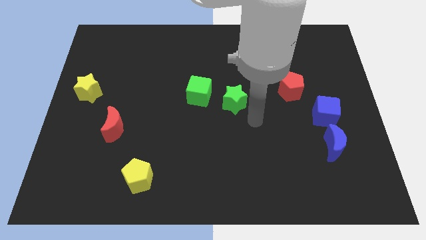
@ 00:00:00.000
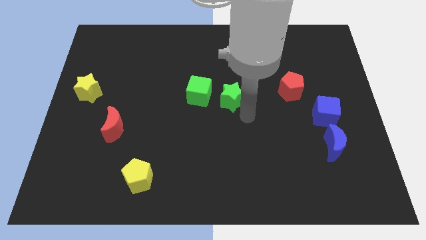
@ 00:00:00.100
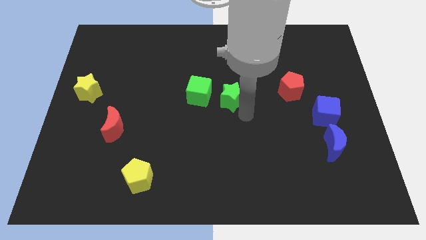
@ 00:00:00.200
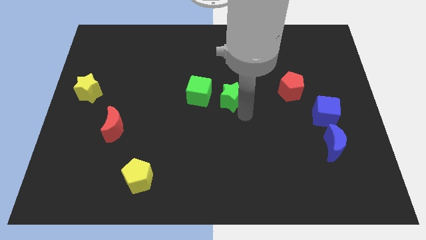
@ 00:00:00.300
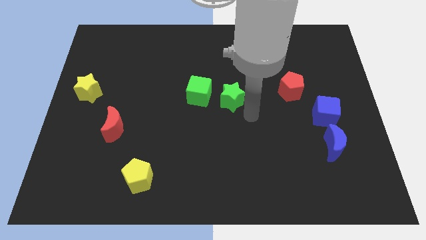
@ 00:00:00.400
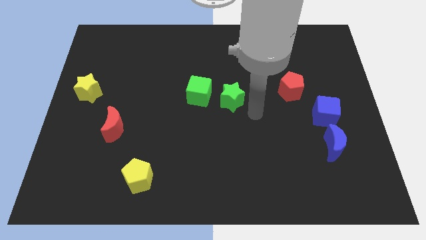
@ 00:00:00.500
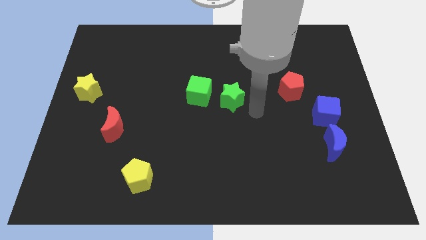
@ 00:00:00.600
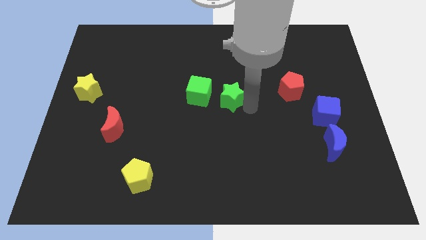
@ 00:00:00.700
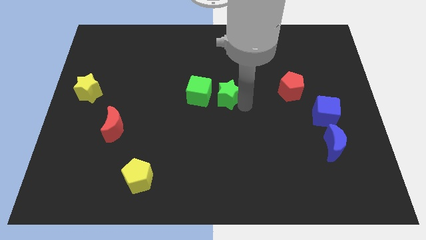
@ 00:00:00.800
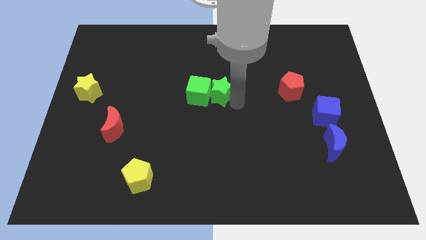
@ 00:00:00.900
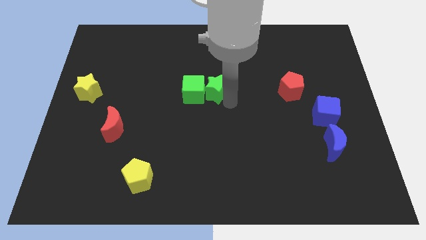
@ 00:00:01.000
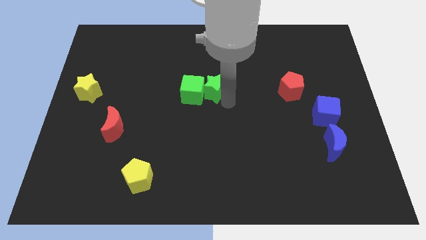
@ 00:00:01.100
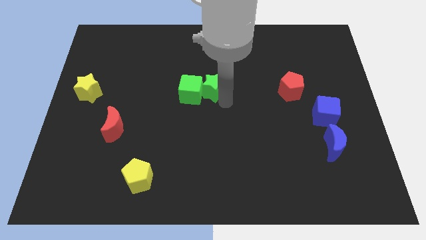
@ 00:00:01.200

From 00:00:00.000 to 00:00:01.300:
push the green star into the green cube

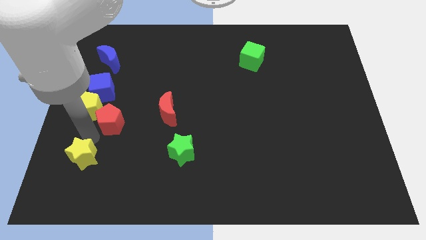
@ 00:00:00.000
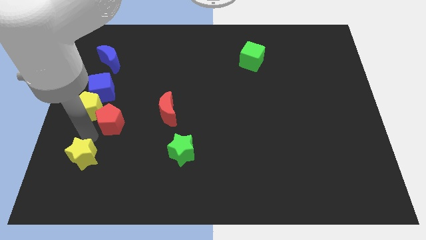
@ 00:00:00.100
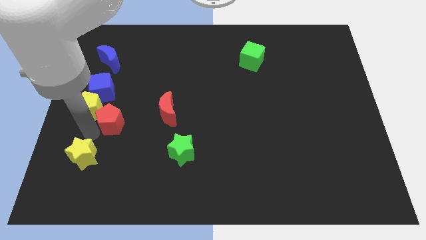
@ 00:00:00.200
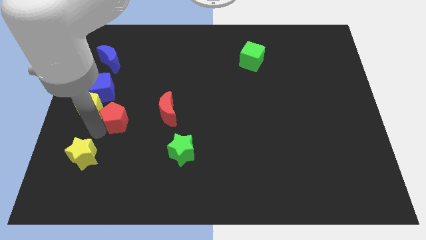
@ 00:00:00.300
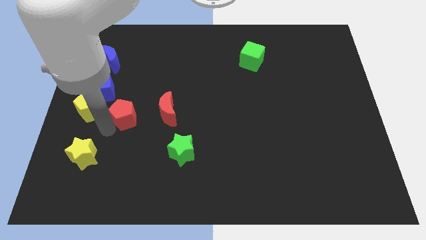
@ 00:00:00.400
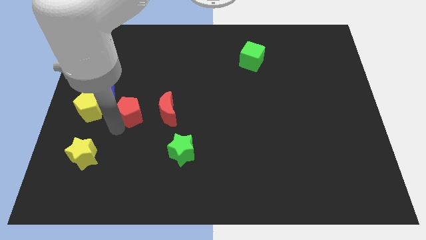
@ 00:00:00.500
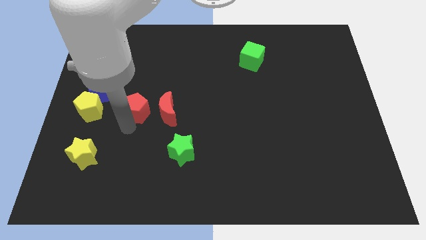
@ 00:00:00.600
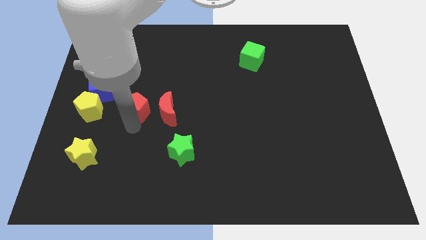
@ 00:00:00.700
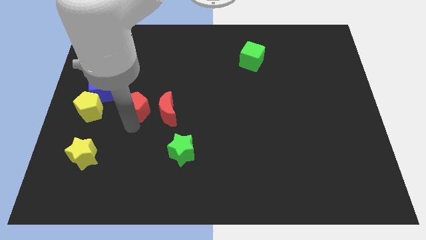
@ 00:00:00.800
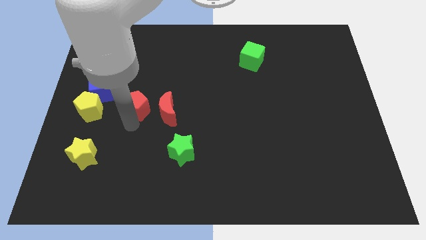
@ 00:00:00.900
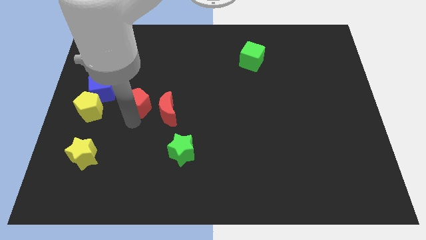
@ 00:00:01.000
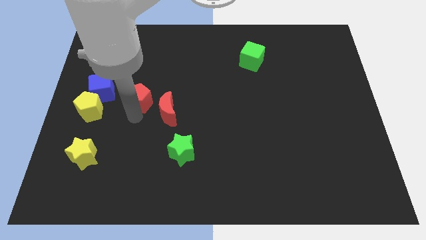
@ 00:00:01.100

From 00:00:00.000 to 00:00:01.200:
place the red pentagon horizontally to the left side of the red crescent

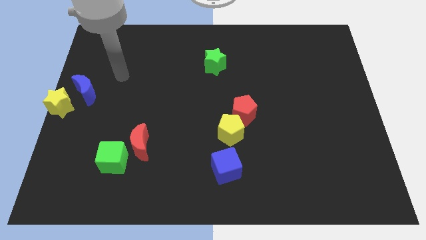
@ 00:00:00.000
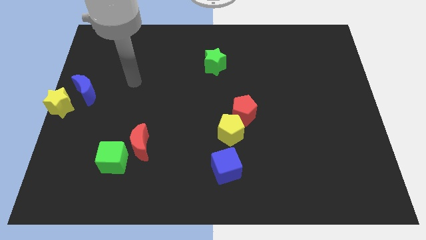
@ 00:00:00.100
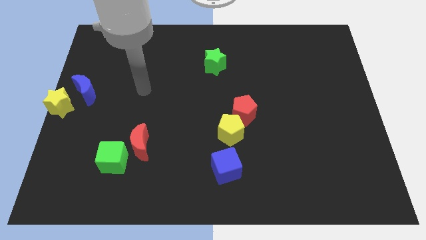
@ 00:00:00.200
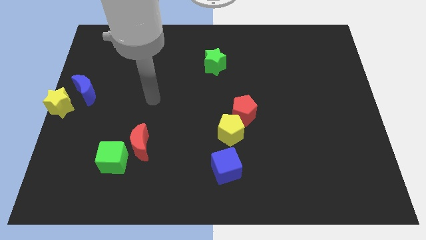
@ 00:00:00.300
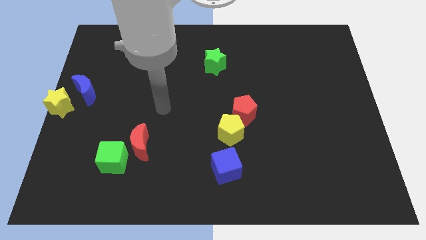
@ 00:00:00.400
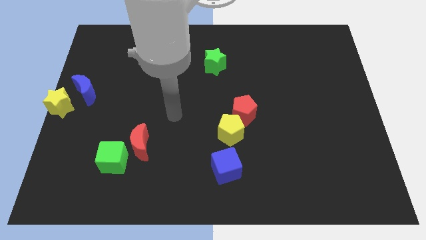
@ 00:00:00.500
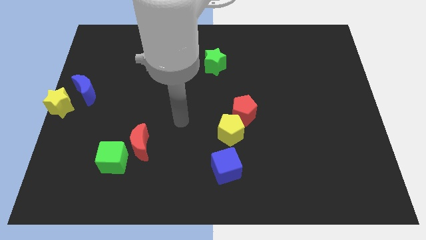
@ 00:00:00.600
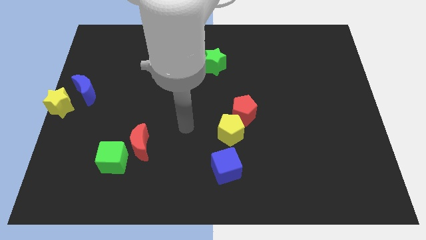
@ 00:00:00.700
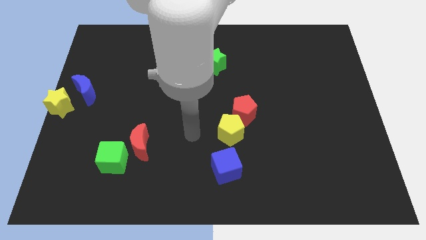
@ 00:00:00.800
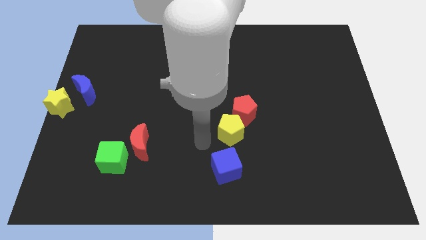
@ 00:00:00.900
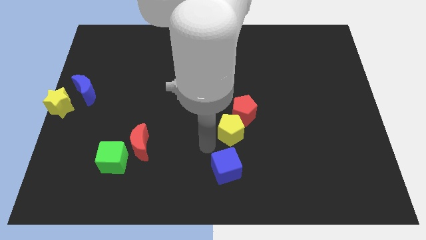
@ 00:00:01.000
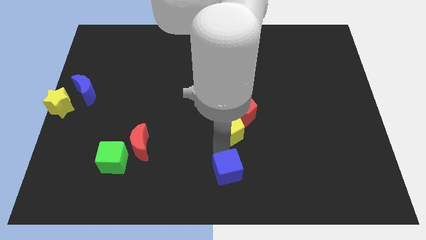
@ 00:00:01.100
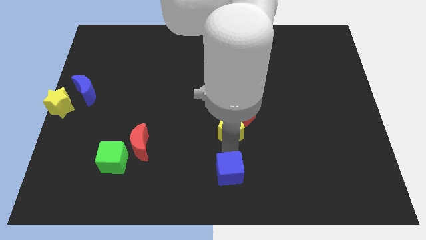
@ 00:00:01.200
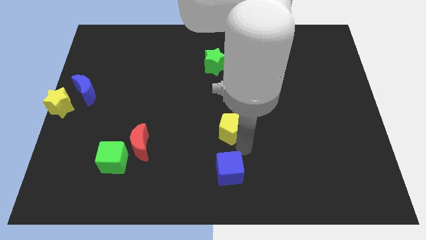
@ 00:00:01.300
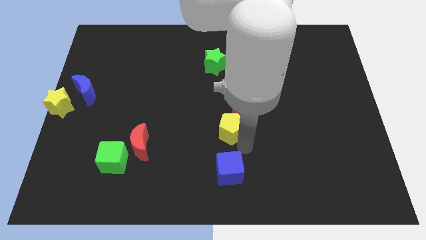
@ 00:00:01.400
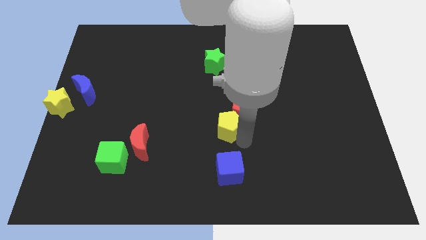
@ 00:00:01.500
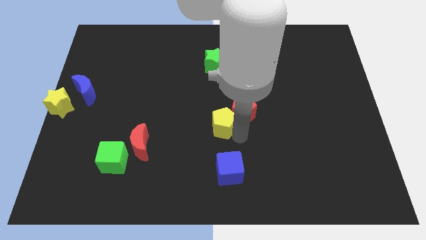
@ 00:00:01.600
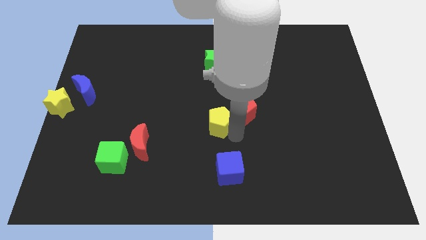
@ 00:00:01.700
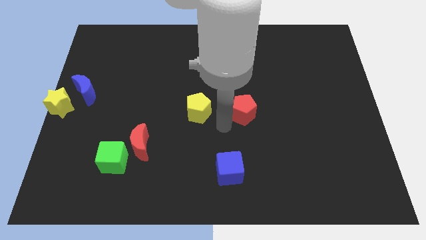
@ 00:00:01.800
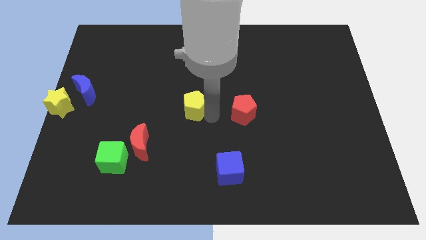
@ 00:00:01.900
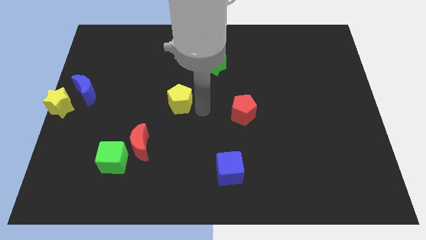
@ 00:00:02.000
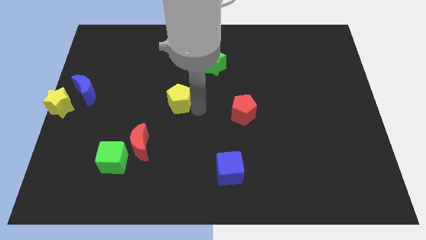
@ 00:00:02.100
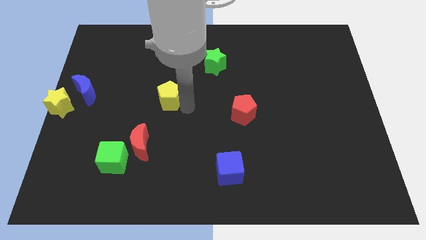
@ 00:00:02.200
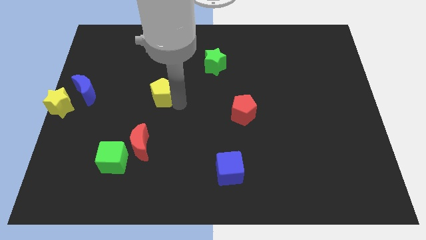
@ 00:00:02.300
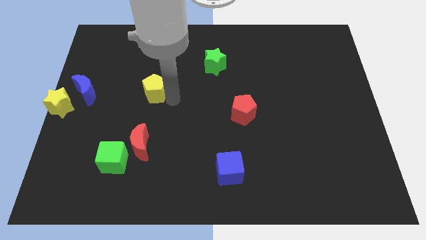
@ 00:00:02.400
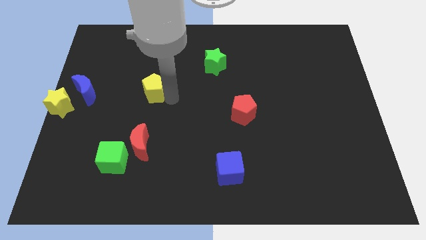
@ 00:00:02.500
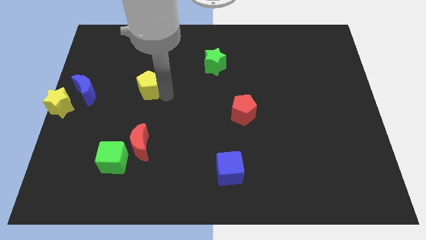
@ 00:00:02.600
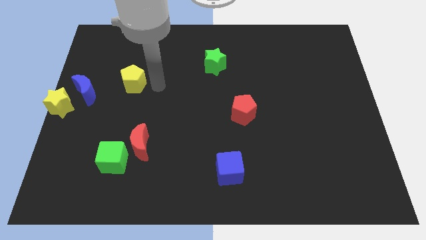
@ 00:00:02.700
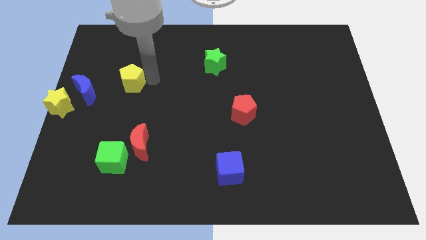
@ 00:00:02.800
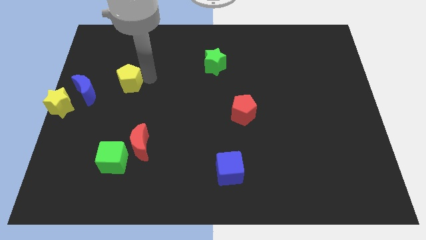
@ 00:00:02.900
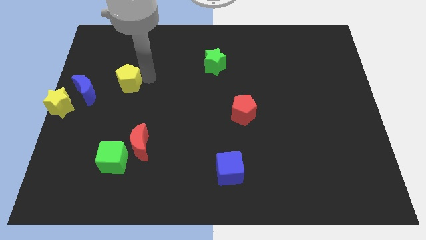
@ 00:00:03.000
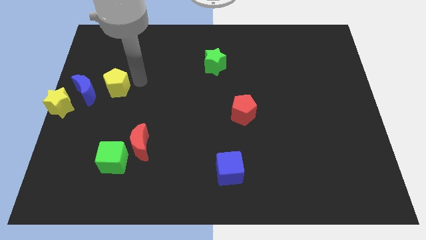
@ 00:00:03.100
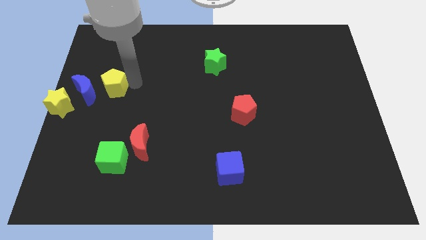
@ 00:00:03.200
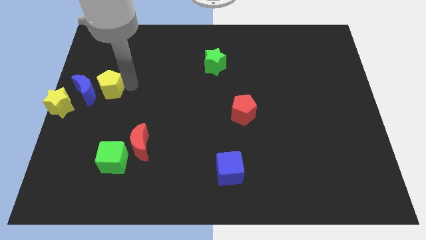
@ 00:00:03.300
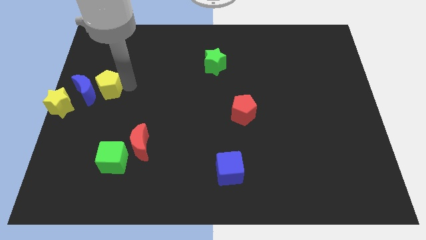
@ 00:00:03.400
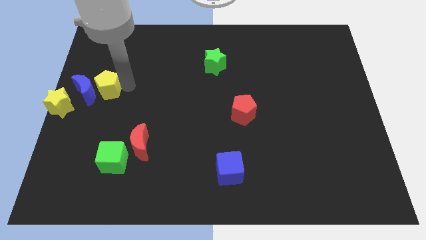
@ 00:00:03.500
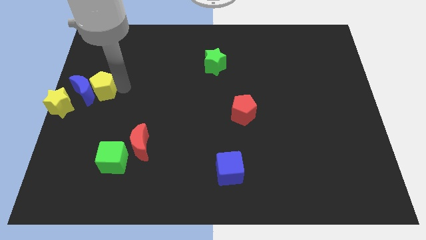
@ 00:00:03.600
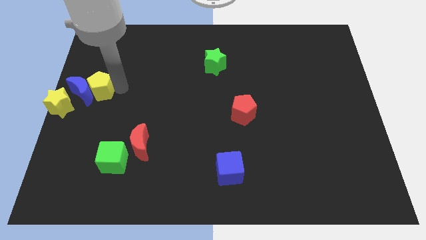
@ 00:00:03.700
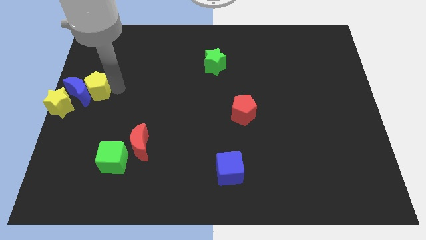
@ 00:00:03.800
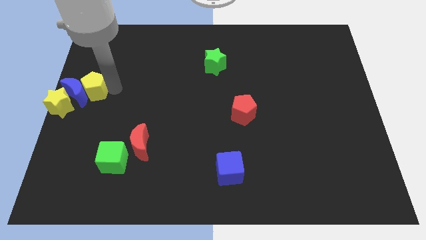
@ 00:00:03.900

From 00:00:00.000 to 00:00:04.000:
push the yellow pentagon into the blue moon

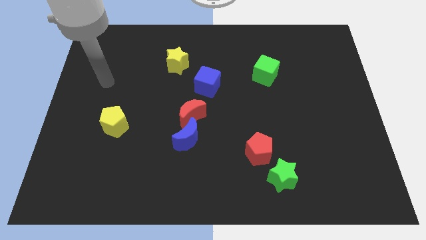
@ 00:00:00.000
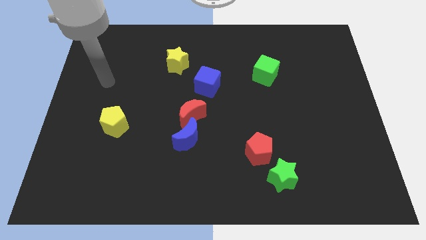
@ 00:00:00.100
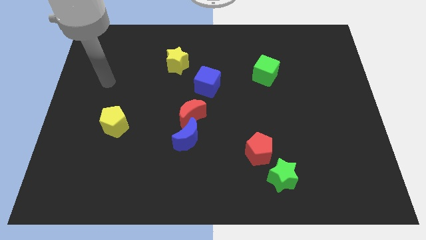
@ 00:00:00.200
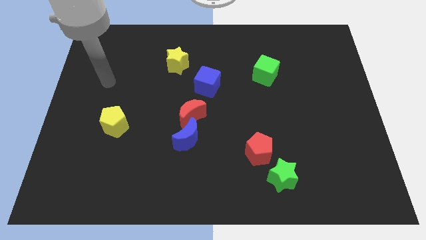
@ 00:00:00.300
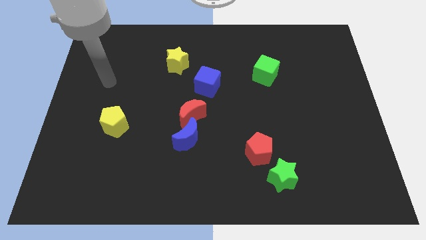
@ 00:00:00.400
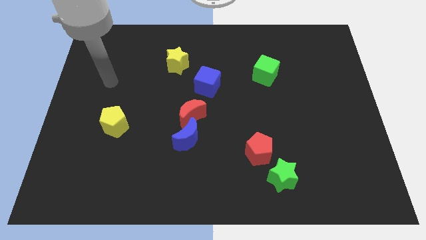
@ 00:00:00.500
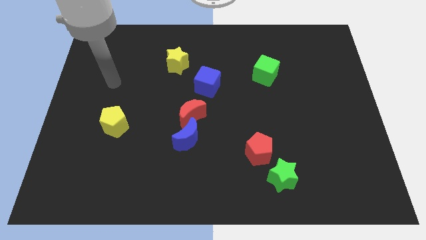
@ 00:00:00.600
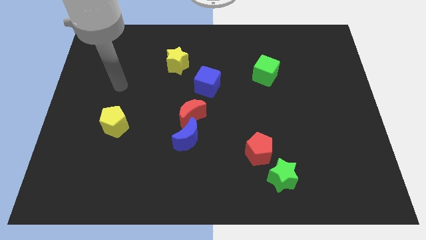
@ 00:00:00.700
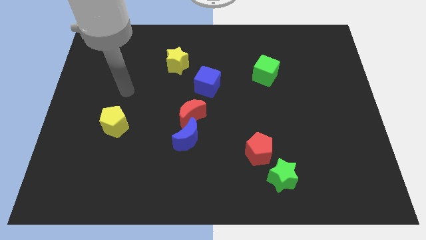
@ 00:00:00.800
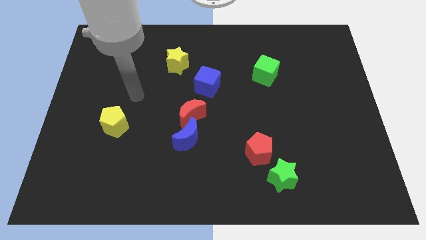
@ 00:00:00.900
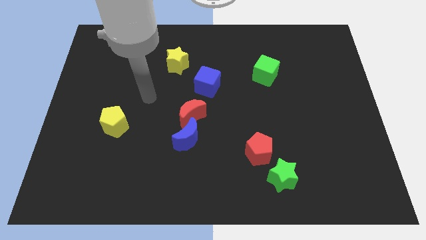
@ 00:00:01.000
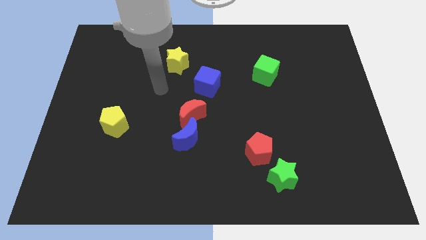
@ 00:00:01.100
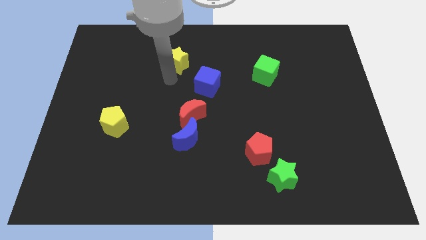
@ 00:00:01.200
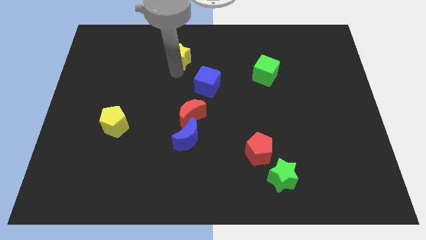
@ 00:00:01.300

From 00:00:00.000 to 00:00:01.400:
move your arm to the yellow star

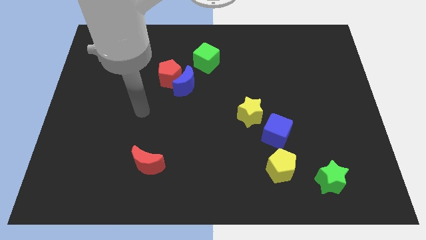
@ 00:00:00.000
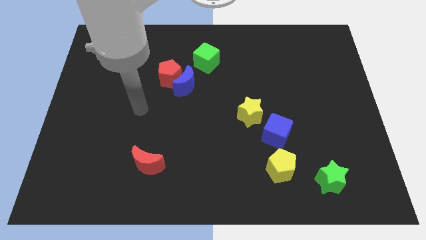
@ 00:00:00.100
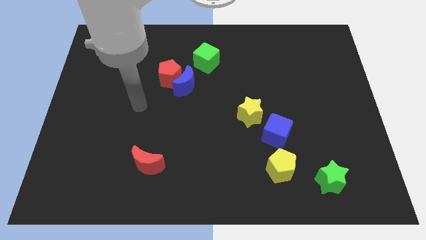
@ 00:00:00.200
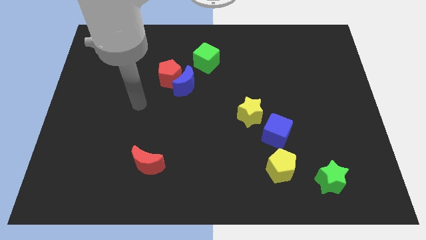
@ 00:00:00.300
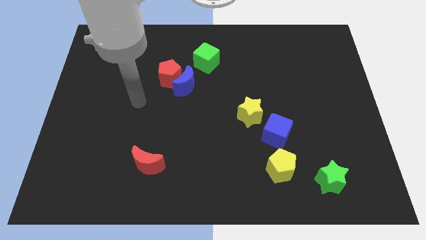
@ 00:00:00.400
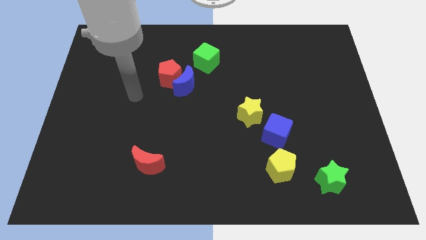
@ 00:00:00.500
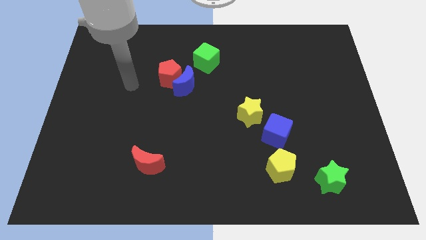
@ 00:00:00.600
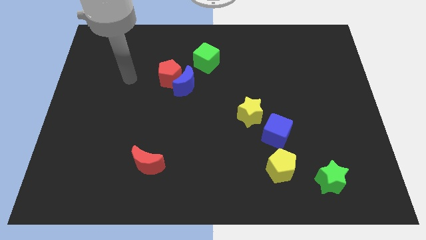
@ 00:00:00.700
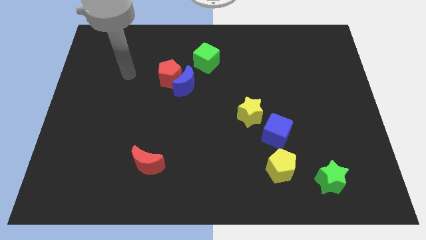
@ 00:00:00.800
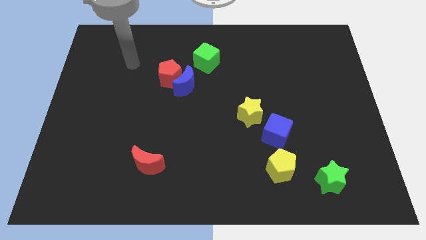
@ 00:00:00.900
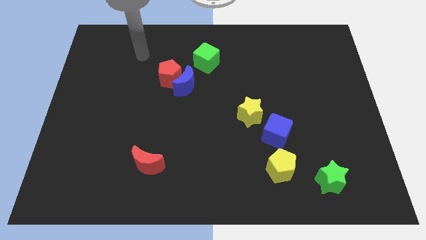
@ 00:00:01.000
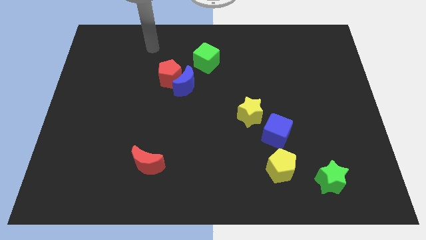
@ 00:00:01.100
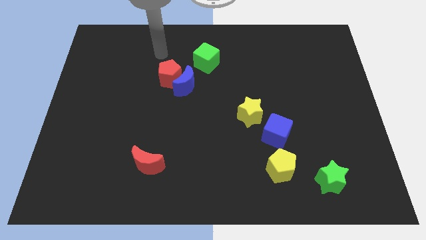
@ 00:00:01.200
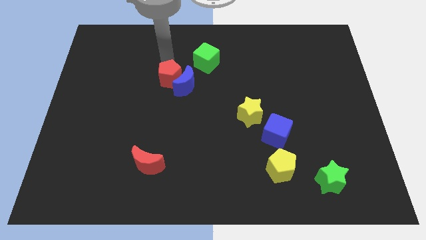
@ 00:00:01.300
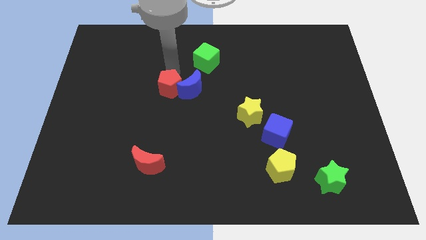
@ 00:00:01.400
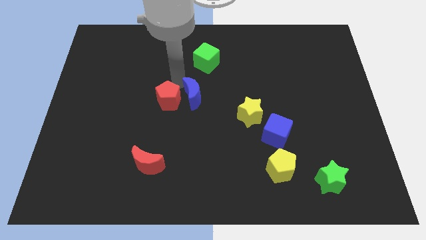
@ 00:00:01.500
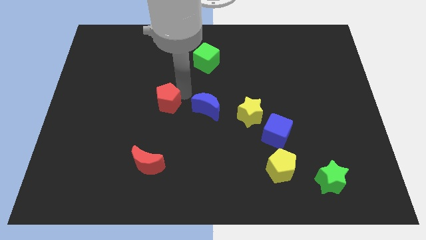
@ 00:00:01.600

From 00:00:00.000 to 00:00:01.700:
move the red pentagon and the blue moon away from each other
